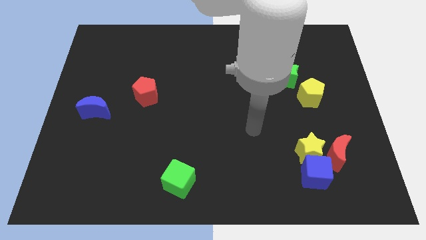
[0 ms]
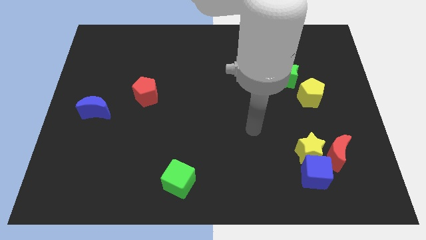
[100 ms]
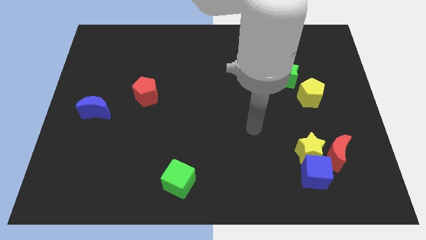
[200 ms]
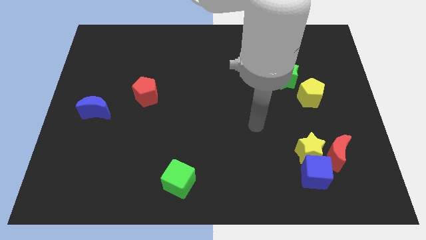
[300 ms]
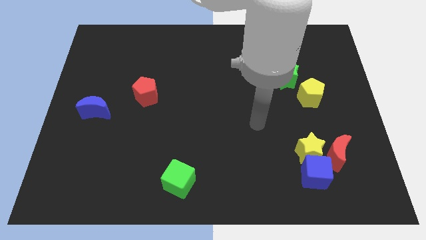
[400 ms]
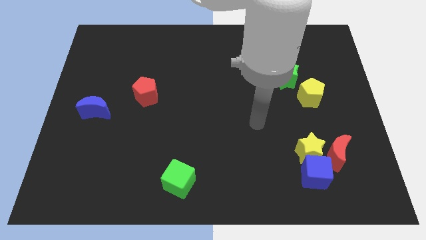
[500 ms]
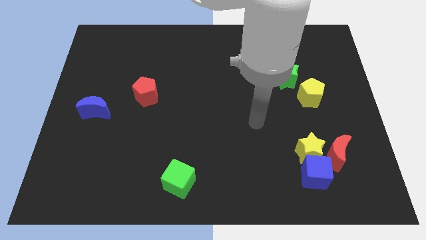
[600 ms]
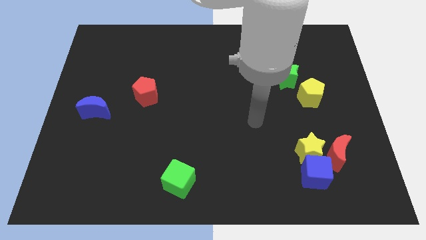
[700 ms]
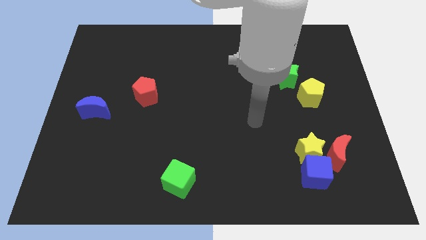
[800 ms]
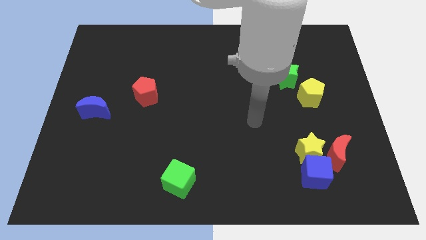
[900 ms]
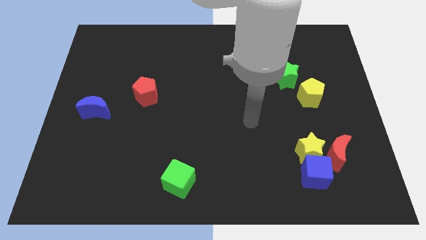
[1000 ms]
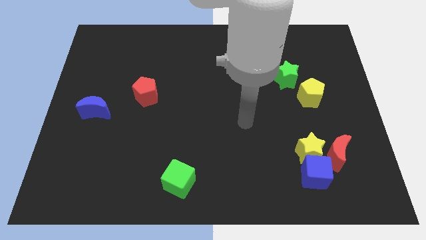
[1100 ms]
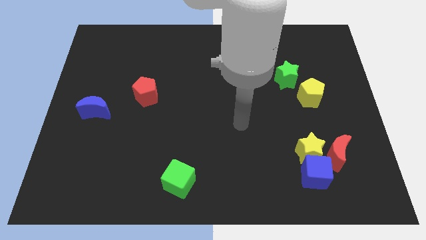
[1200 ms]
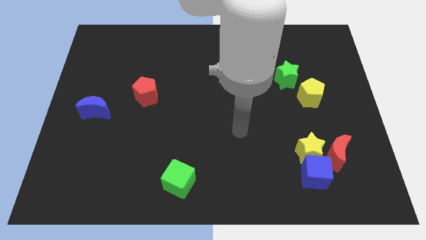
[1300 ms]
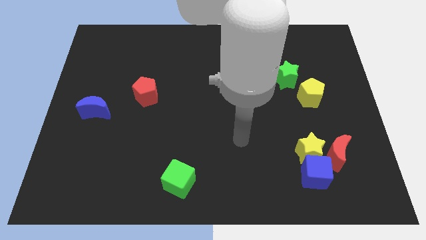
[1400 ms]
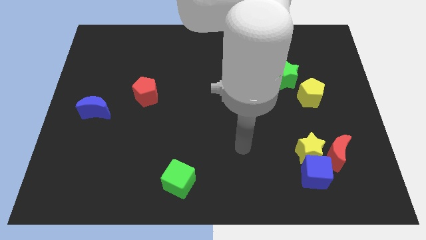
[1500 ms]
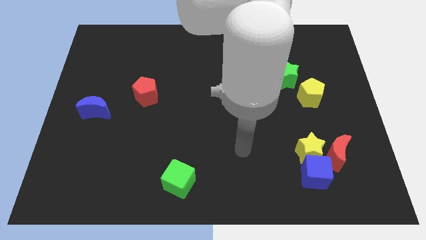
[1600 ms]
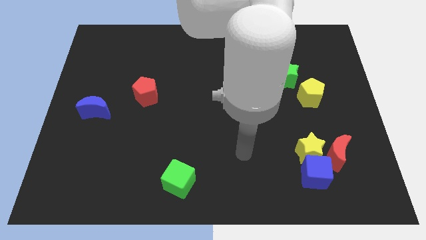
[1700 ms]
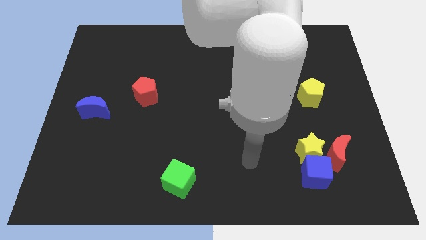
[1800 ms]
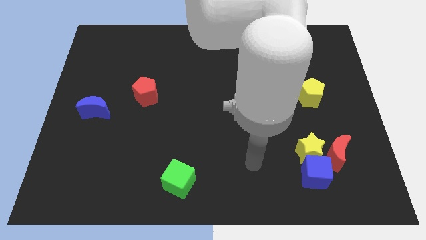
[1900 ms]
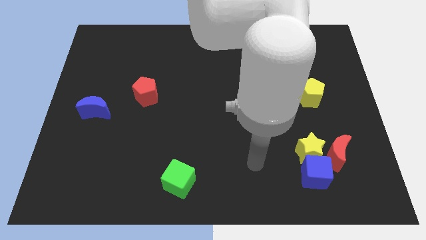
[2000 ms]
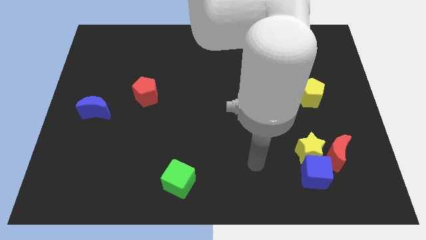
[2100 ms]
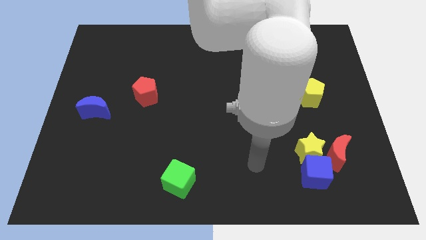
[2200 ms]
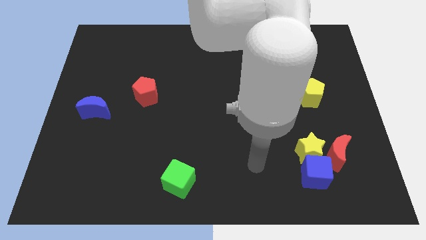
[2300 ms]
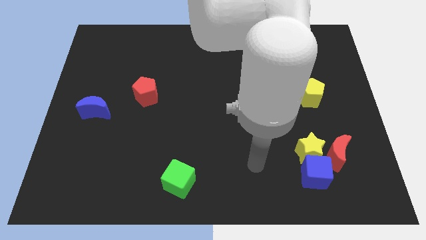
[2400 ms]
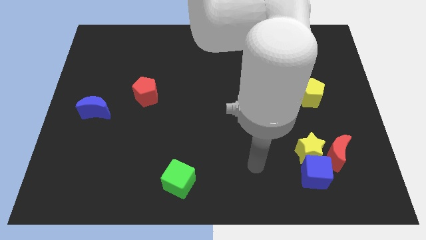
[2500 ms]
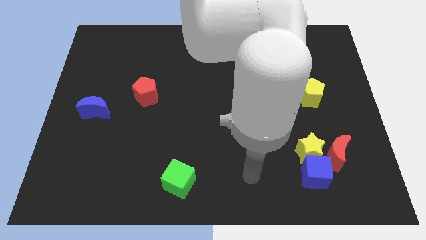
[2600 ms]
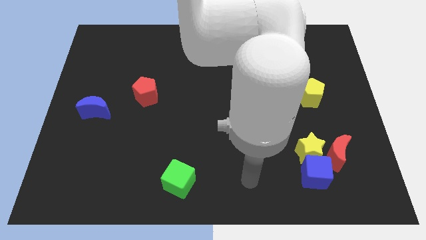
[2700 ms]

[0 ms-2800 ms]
move your towards bottom center

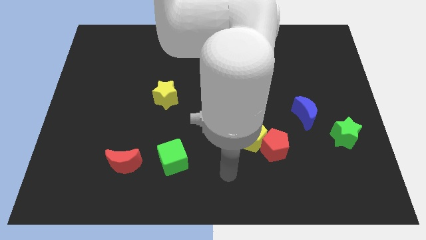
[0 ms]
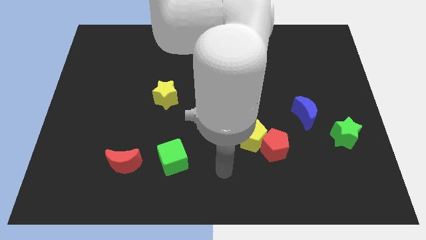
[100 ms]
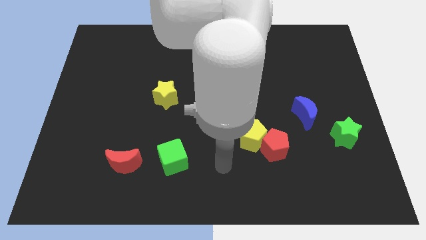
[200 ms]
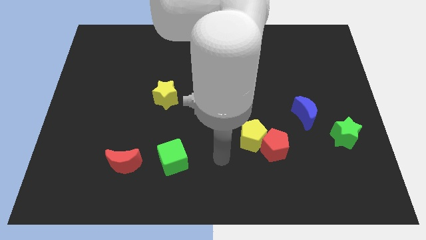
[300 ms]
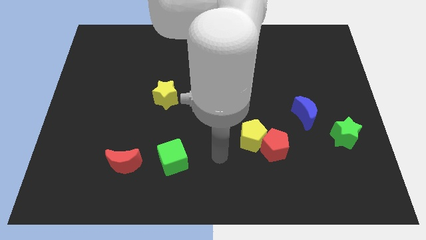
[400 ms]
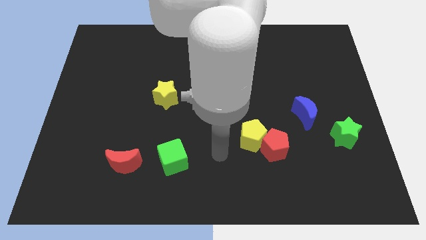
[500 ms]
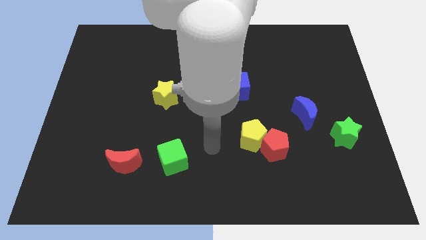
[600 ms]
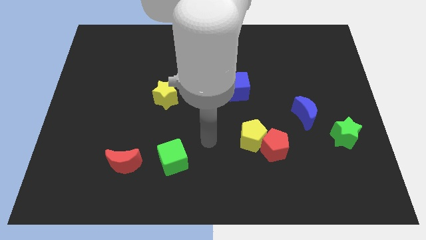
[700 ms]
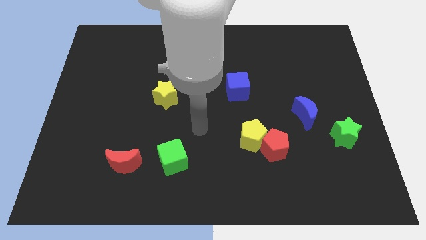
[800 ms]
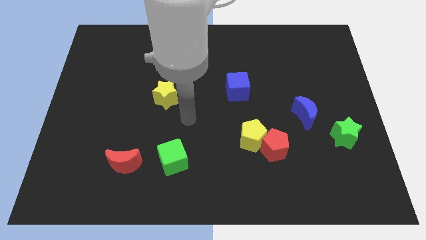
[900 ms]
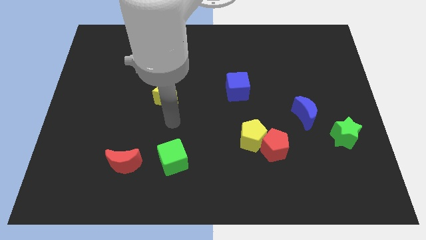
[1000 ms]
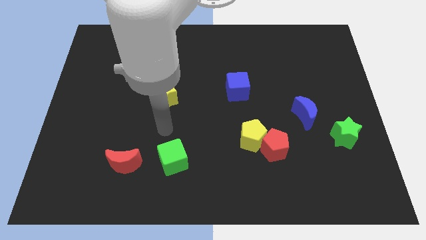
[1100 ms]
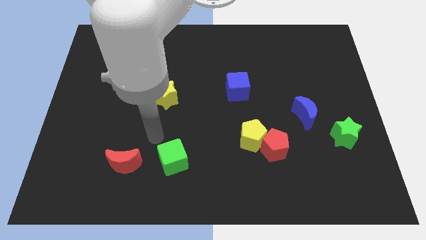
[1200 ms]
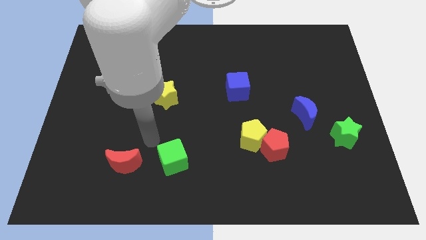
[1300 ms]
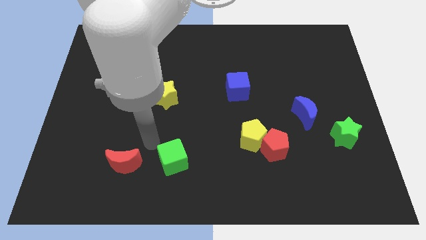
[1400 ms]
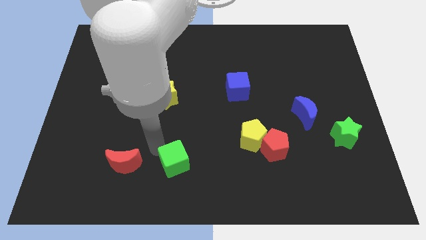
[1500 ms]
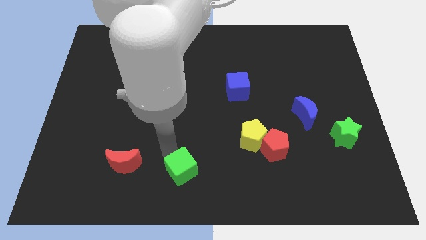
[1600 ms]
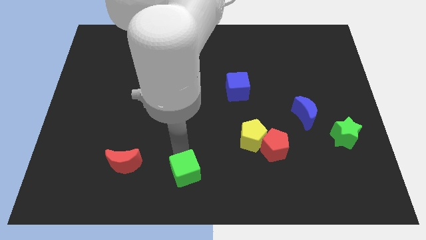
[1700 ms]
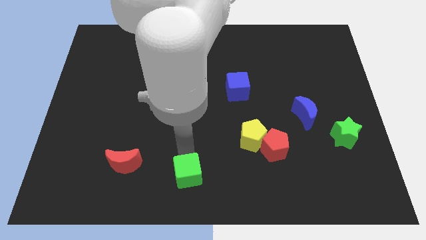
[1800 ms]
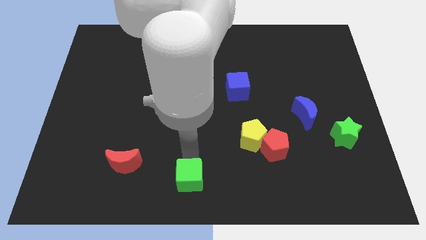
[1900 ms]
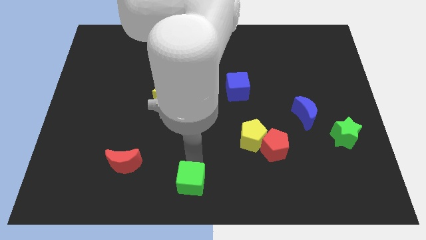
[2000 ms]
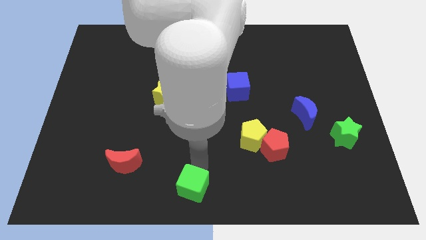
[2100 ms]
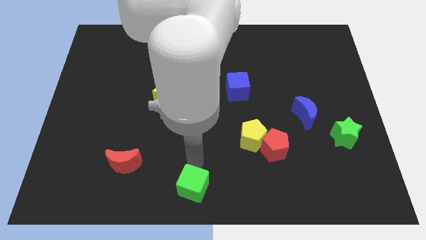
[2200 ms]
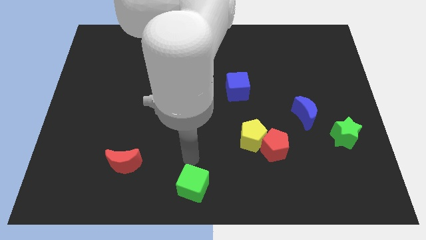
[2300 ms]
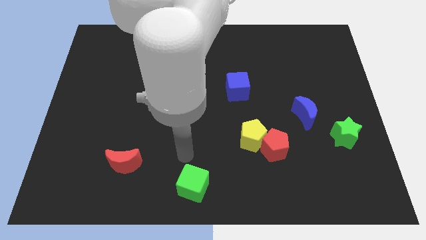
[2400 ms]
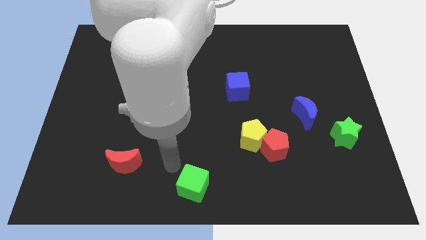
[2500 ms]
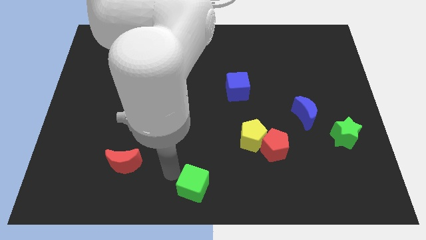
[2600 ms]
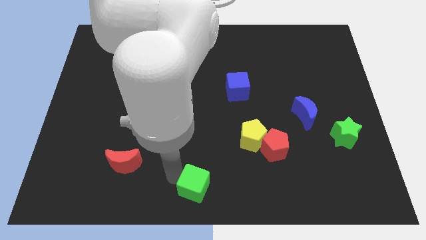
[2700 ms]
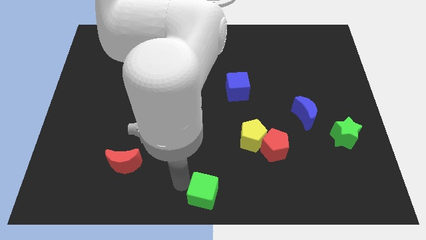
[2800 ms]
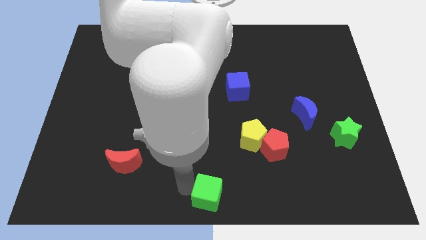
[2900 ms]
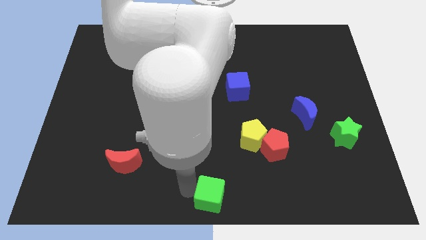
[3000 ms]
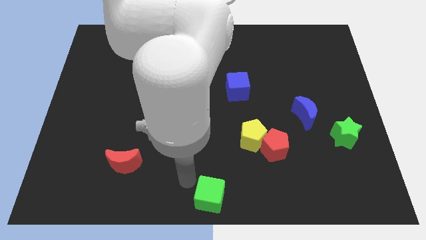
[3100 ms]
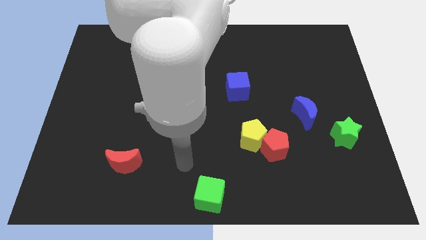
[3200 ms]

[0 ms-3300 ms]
move the green cube to the bottom center of the board

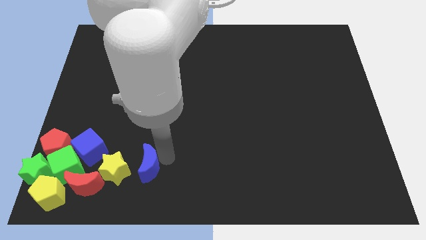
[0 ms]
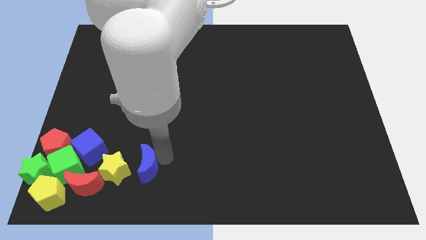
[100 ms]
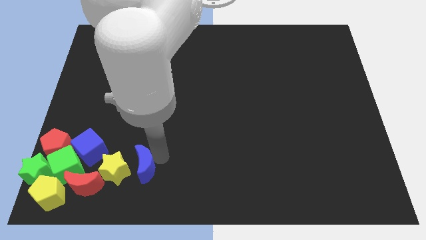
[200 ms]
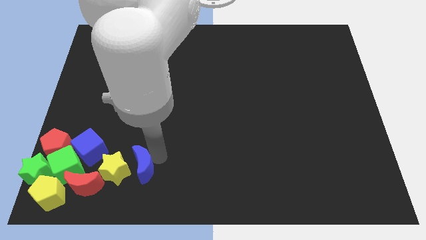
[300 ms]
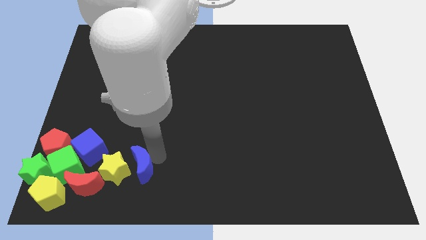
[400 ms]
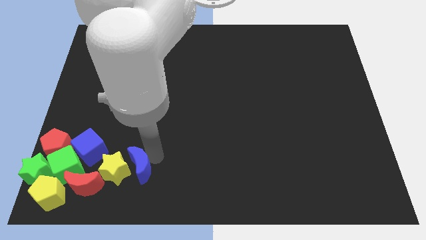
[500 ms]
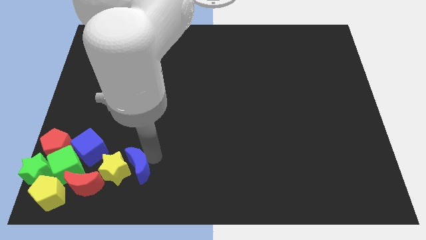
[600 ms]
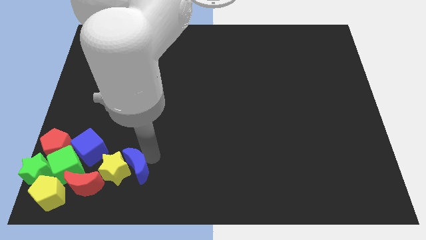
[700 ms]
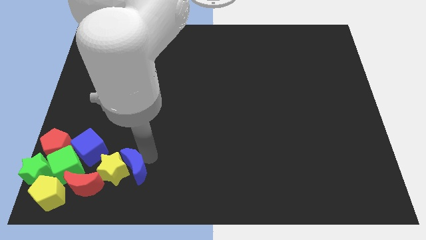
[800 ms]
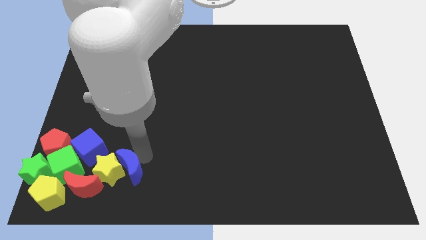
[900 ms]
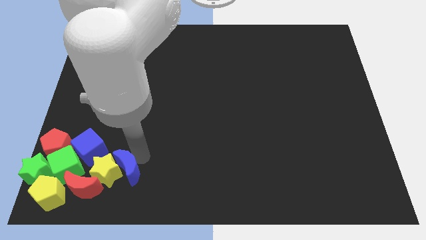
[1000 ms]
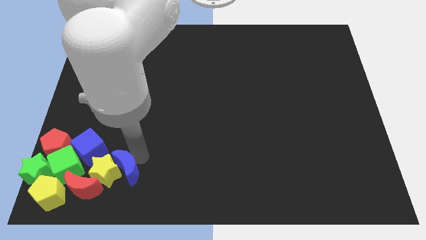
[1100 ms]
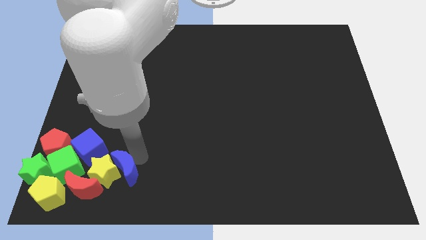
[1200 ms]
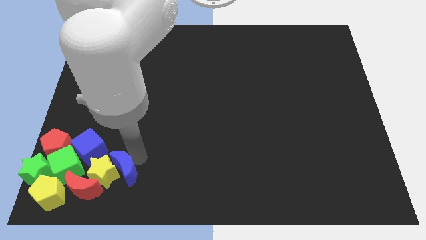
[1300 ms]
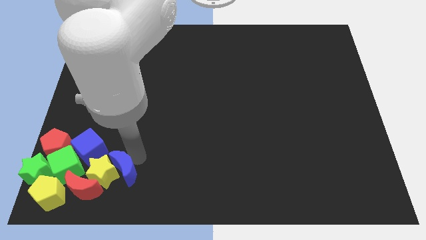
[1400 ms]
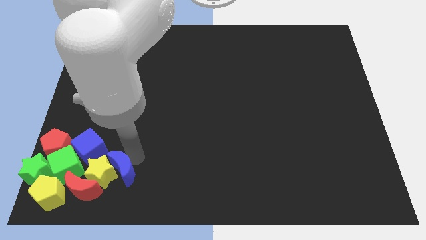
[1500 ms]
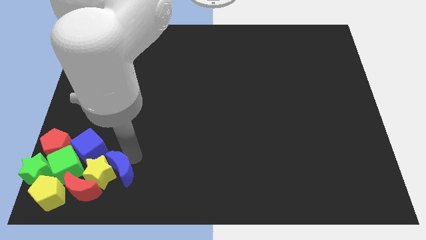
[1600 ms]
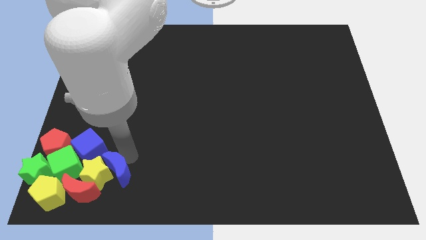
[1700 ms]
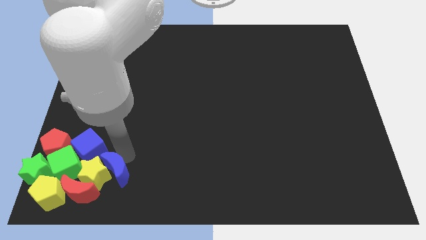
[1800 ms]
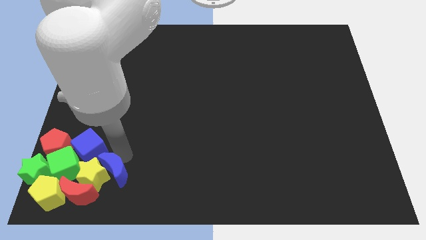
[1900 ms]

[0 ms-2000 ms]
push the blue crescent into the yellow star

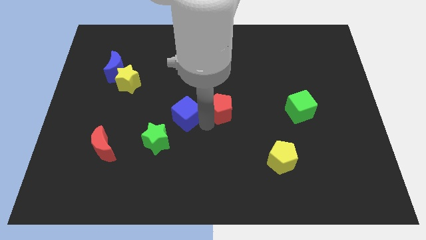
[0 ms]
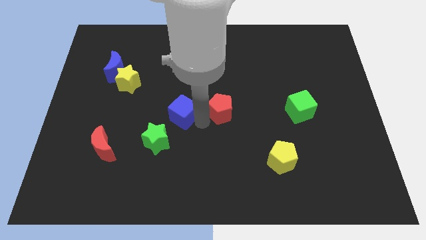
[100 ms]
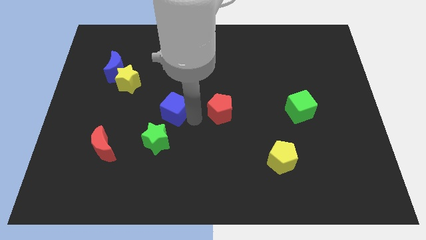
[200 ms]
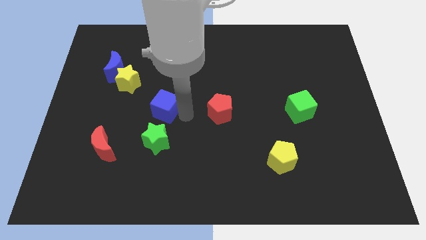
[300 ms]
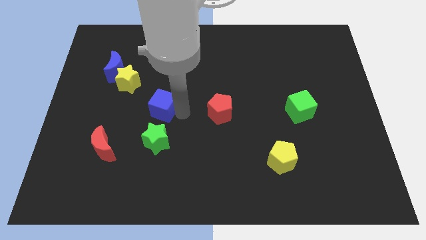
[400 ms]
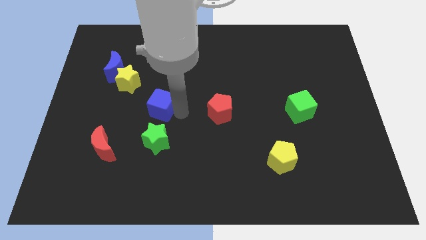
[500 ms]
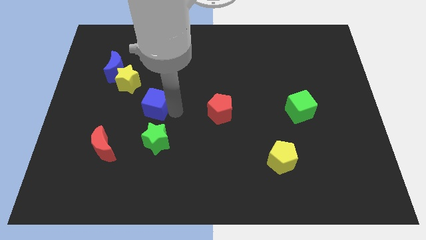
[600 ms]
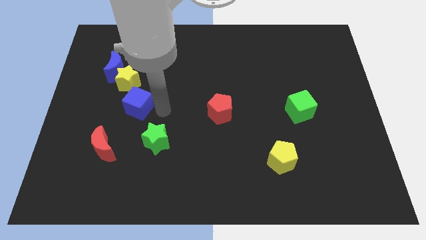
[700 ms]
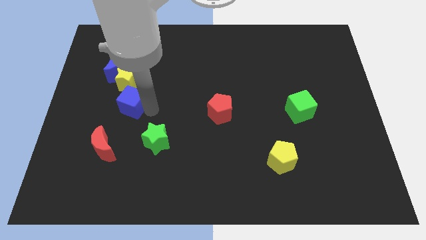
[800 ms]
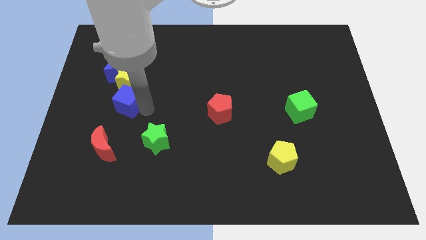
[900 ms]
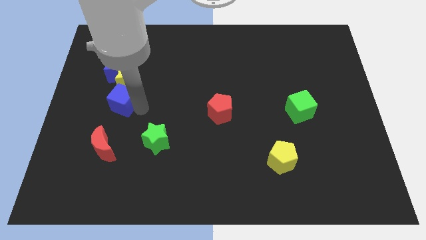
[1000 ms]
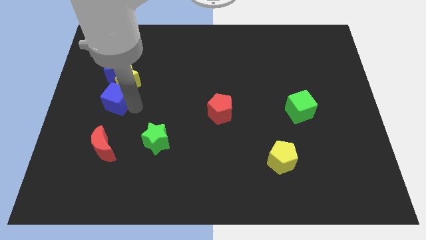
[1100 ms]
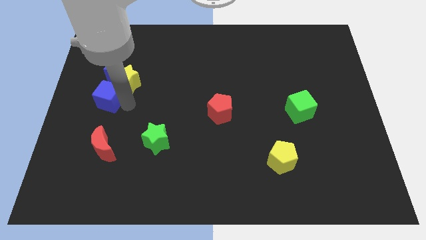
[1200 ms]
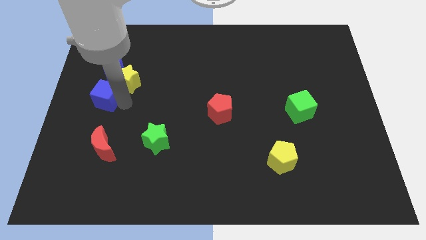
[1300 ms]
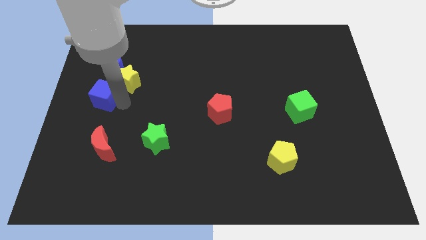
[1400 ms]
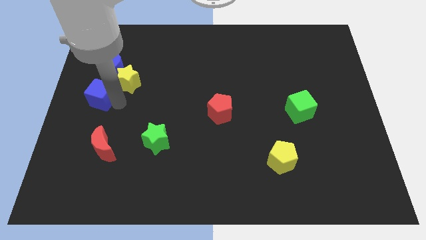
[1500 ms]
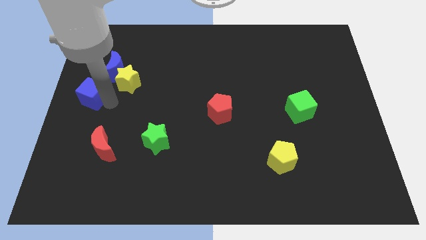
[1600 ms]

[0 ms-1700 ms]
push the blue cube to the left of the yellow star
